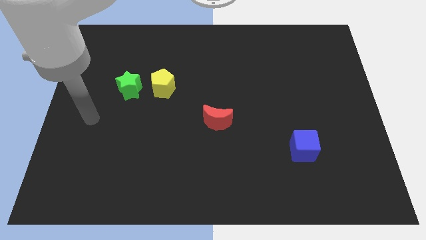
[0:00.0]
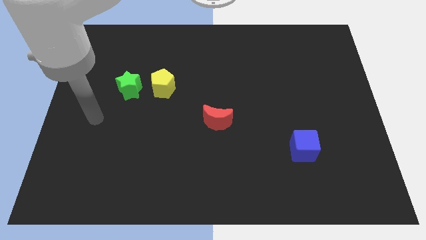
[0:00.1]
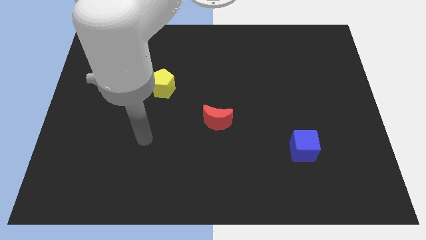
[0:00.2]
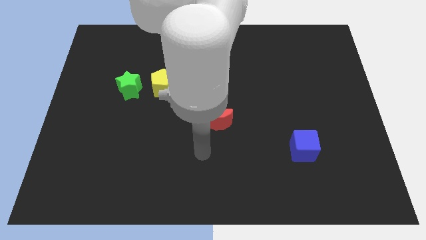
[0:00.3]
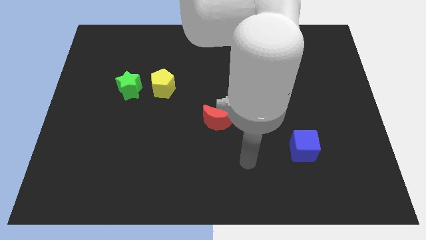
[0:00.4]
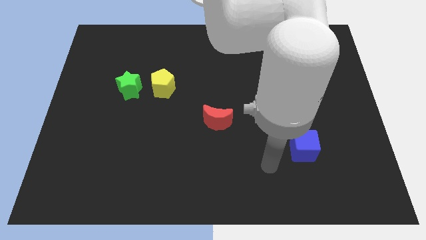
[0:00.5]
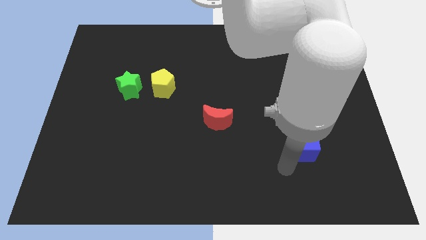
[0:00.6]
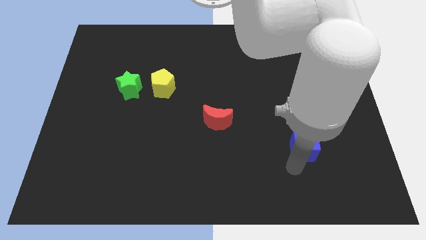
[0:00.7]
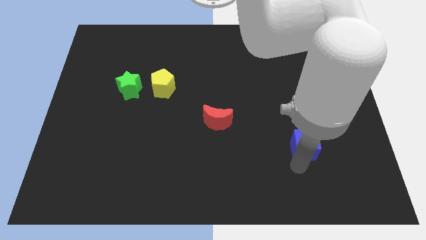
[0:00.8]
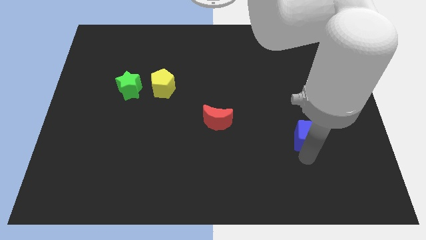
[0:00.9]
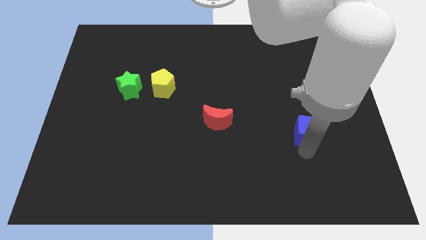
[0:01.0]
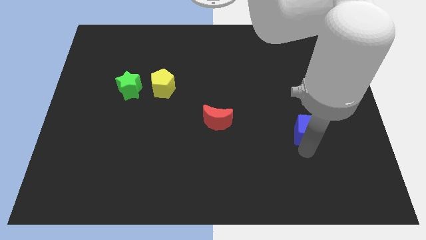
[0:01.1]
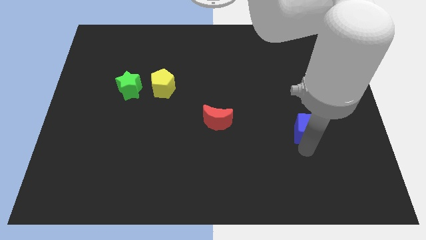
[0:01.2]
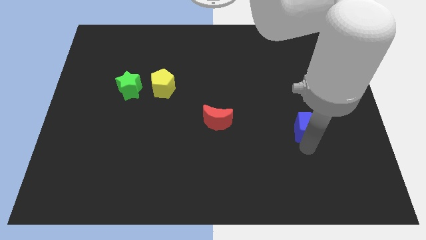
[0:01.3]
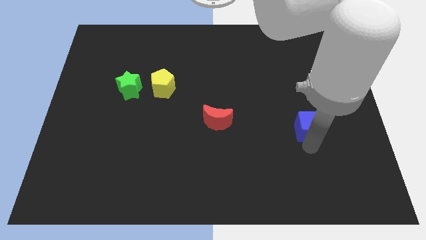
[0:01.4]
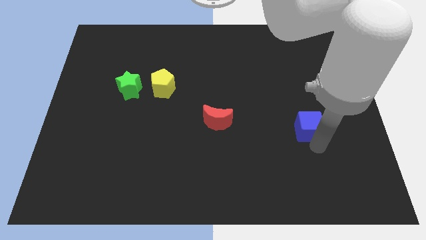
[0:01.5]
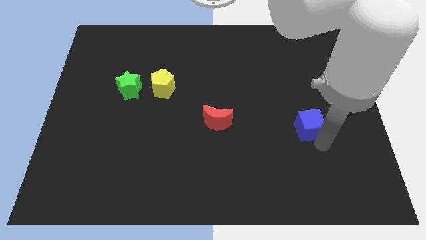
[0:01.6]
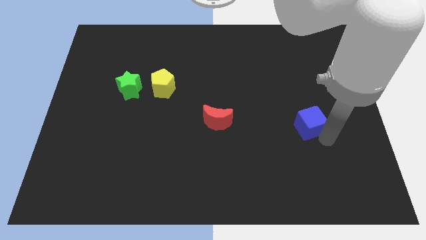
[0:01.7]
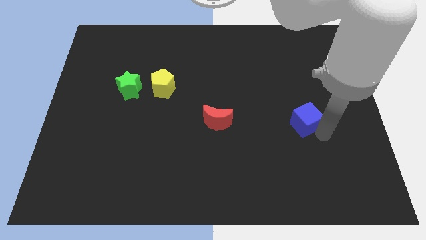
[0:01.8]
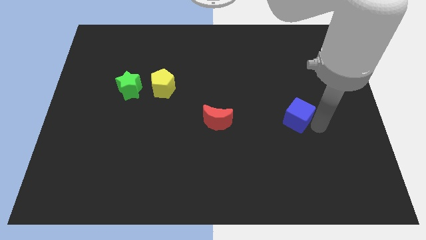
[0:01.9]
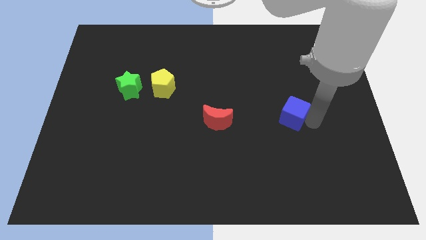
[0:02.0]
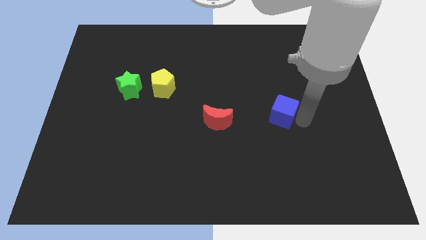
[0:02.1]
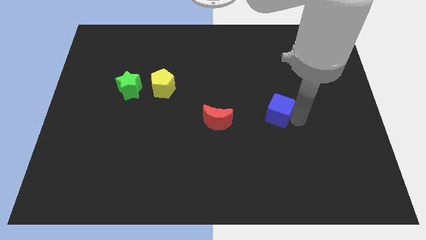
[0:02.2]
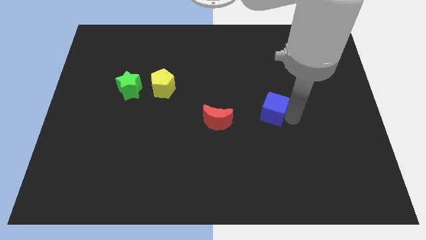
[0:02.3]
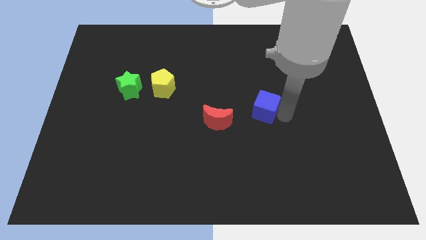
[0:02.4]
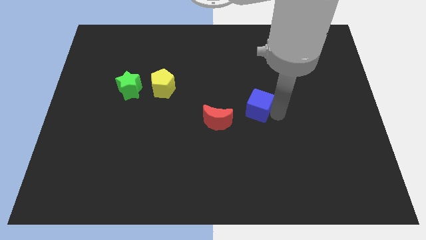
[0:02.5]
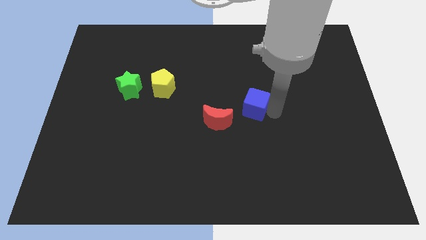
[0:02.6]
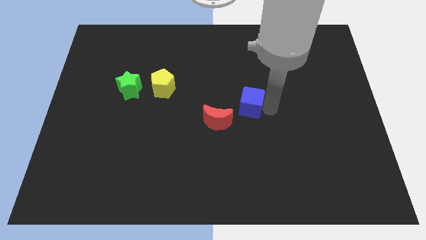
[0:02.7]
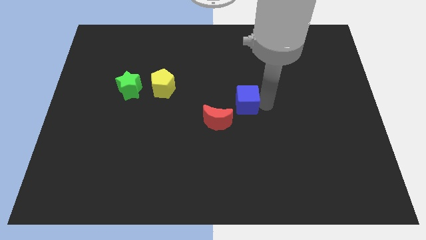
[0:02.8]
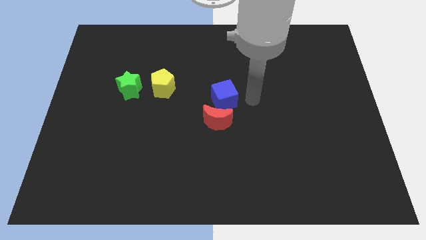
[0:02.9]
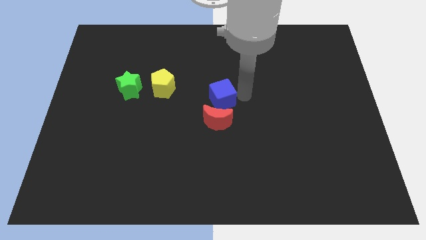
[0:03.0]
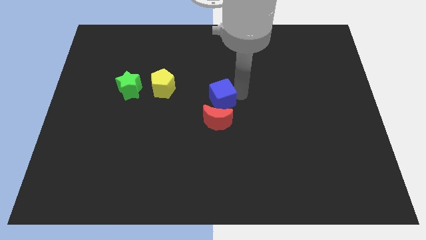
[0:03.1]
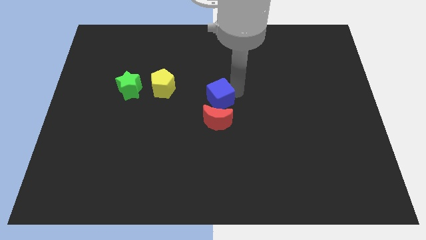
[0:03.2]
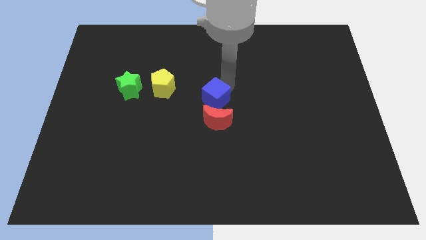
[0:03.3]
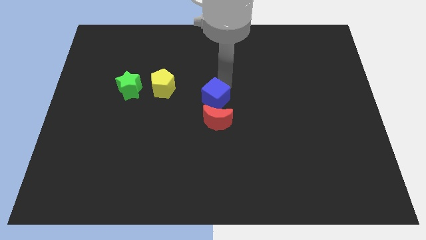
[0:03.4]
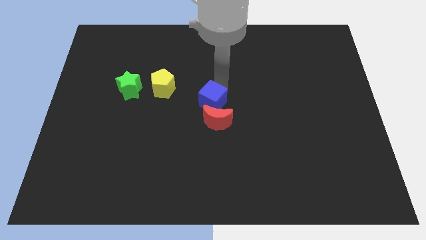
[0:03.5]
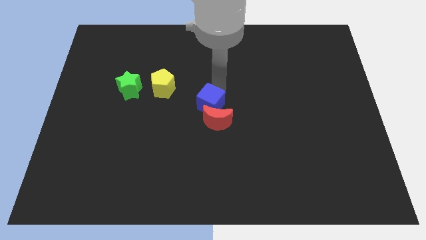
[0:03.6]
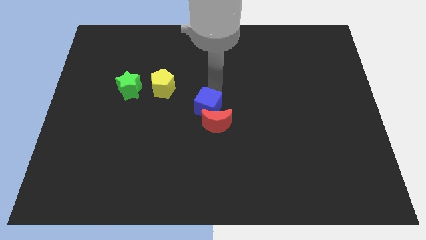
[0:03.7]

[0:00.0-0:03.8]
move the blue cube close to the moon

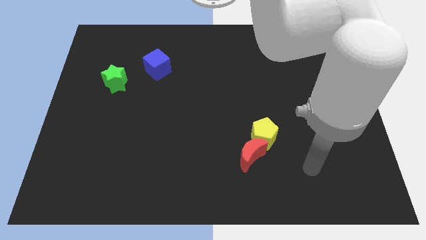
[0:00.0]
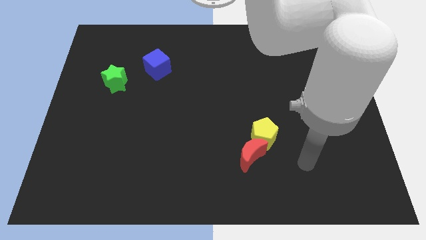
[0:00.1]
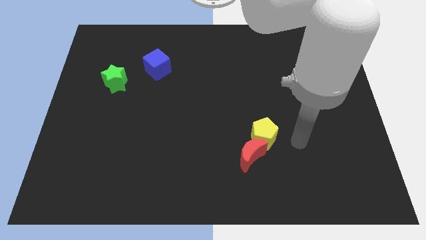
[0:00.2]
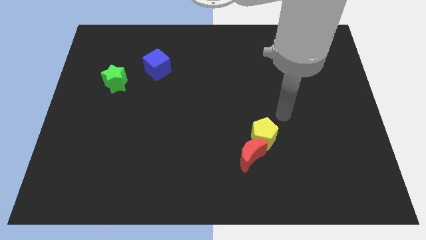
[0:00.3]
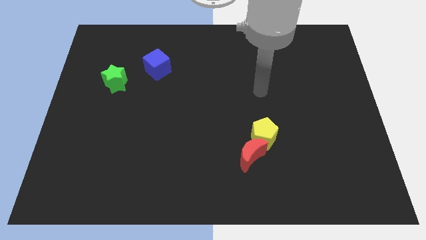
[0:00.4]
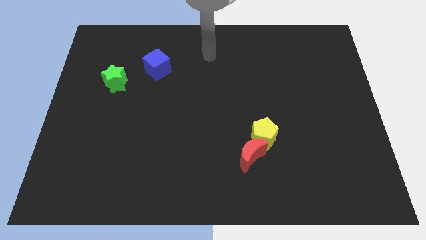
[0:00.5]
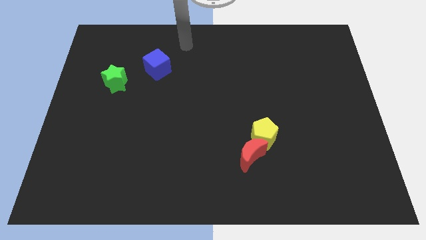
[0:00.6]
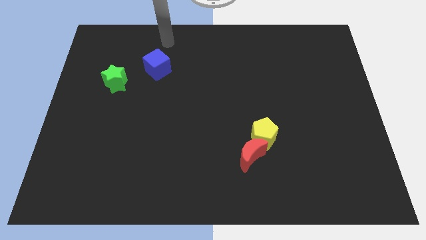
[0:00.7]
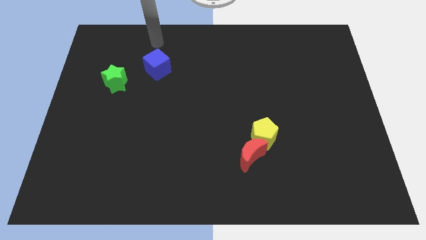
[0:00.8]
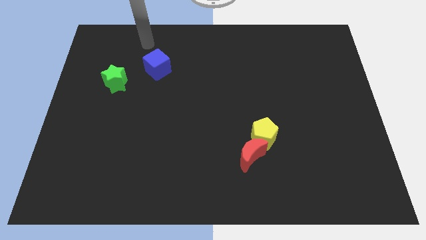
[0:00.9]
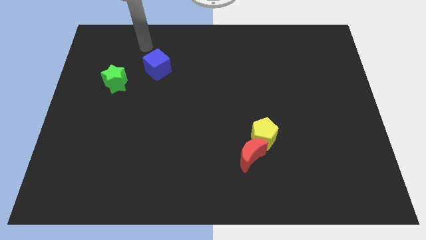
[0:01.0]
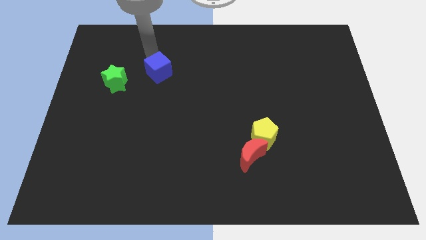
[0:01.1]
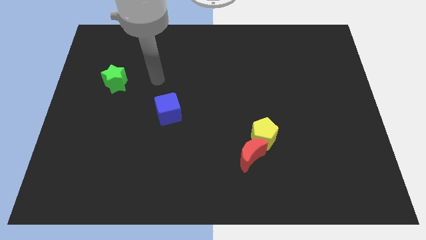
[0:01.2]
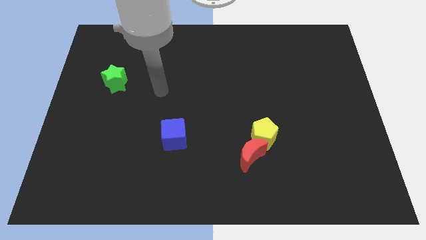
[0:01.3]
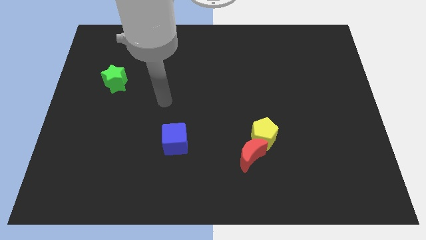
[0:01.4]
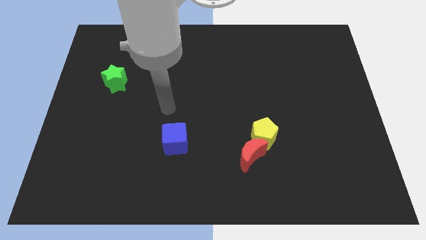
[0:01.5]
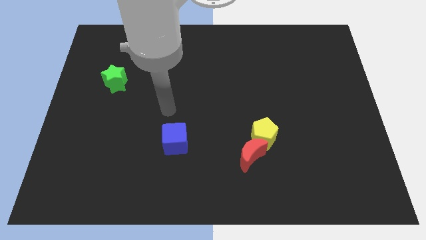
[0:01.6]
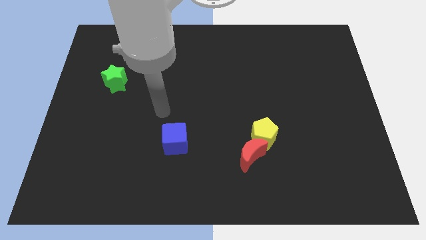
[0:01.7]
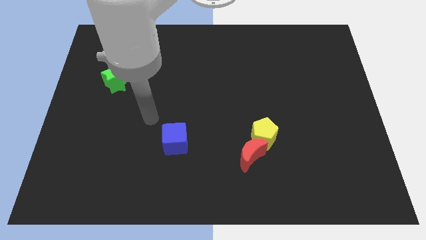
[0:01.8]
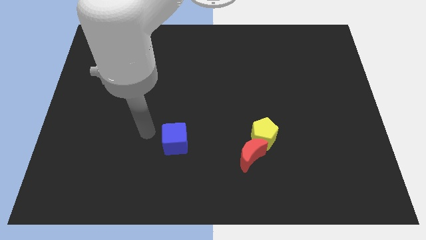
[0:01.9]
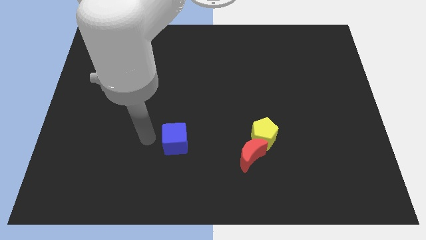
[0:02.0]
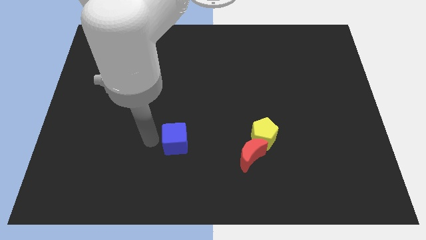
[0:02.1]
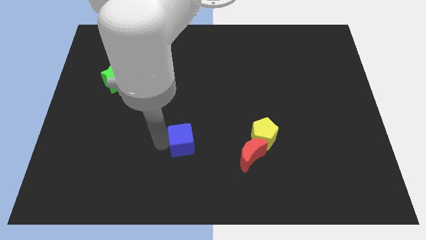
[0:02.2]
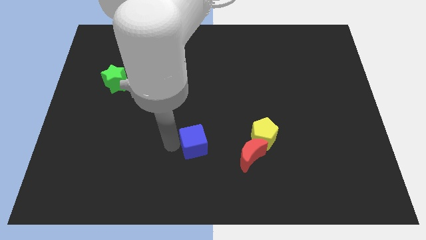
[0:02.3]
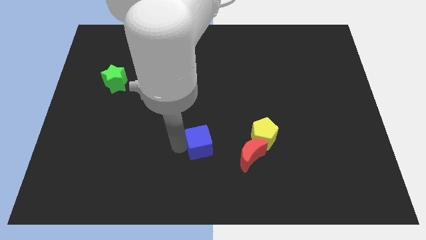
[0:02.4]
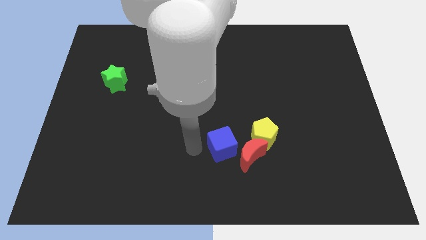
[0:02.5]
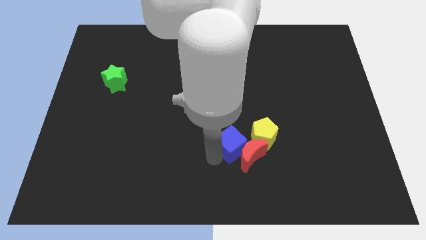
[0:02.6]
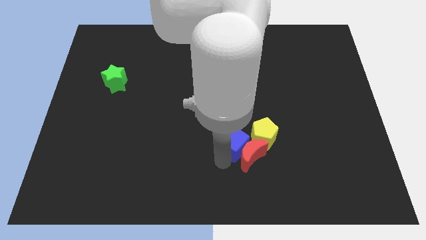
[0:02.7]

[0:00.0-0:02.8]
put the cube next to the red moon

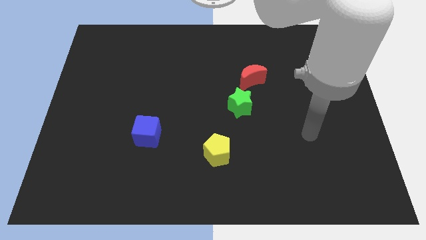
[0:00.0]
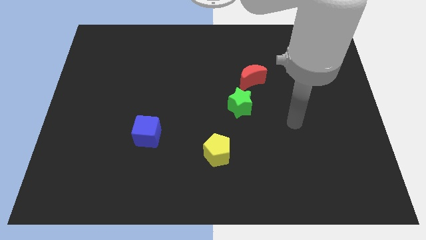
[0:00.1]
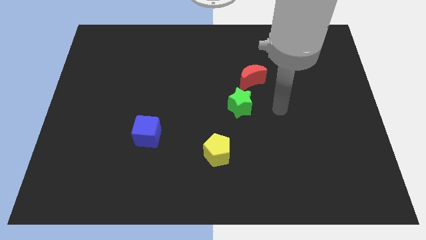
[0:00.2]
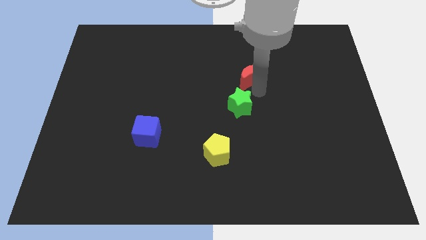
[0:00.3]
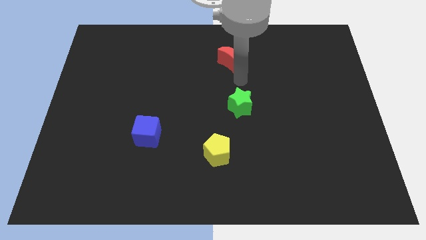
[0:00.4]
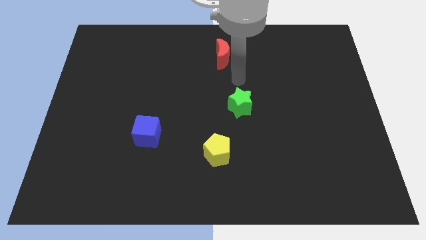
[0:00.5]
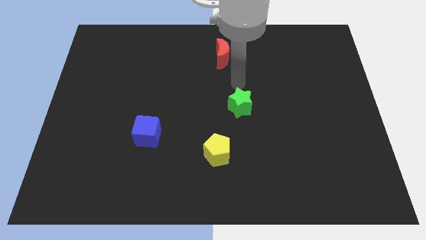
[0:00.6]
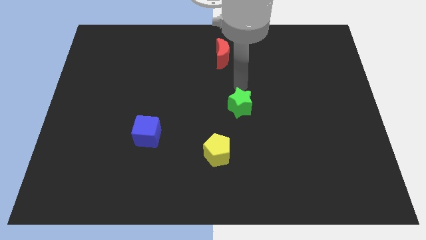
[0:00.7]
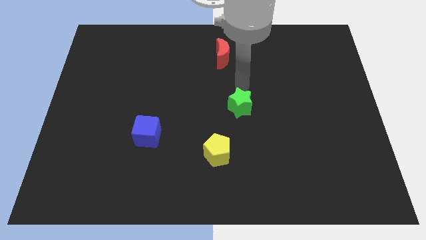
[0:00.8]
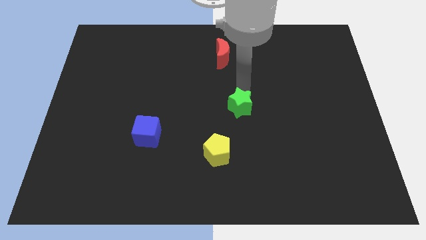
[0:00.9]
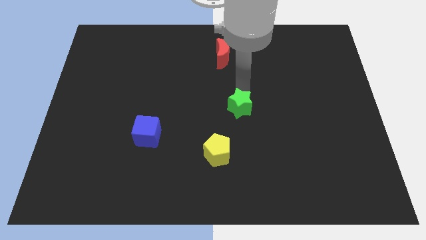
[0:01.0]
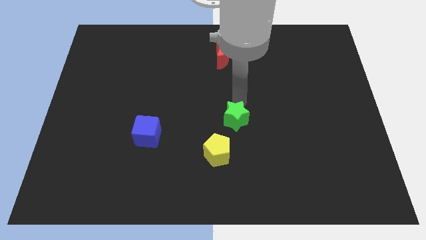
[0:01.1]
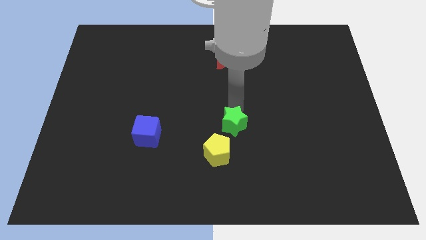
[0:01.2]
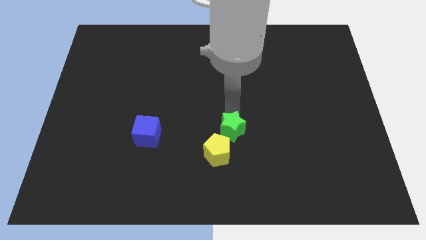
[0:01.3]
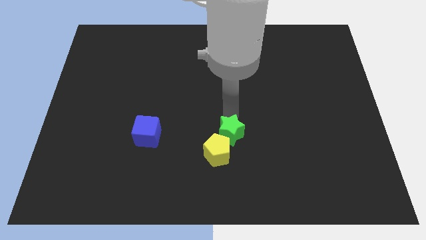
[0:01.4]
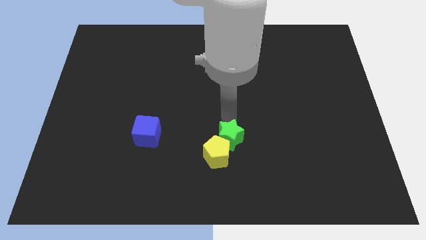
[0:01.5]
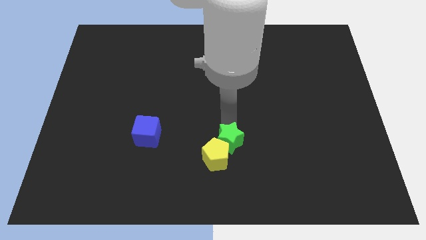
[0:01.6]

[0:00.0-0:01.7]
move the green star towards the yellow block
